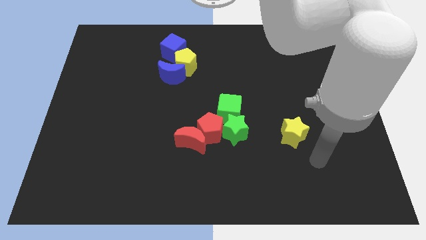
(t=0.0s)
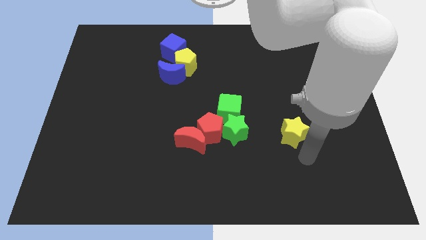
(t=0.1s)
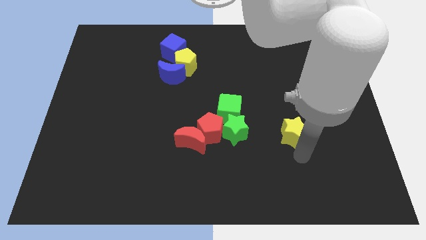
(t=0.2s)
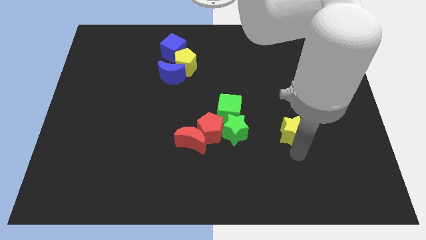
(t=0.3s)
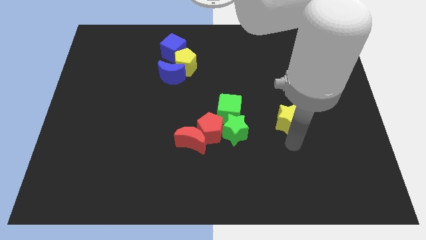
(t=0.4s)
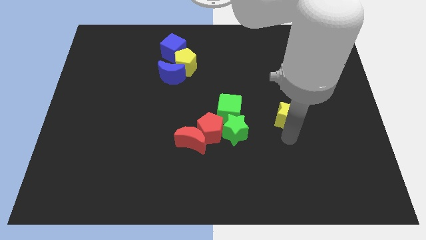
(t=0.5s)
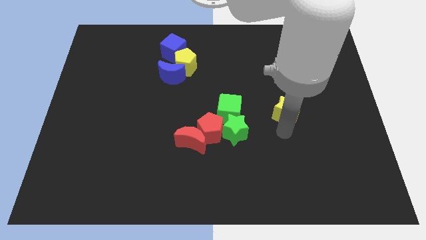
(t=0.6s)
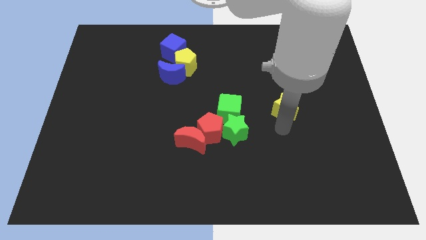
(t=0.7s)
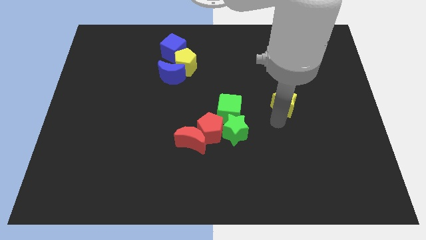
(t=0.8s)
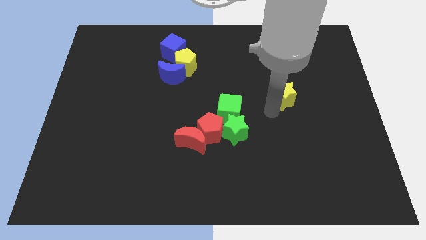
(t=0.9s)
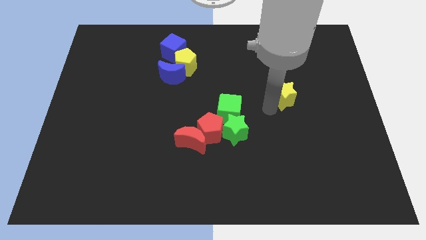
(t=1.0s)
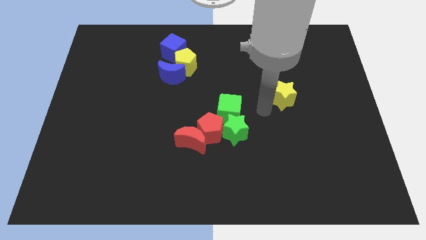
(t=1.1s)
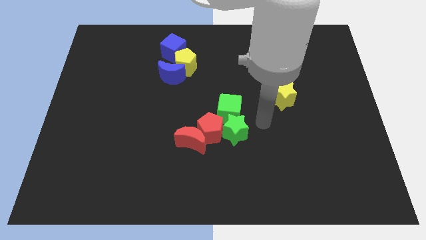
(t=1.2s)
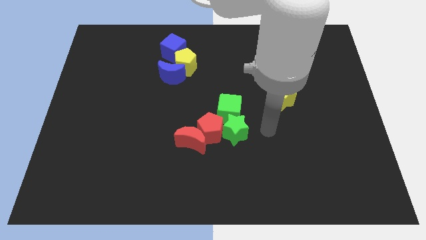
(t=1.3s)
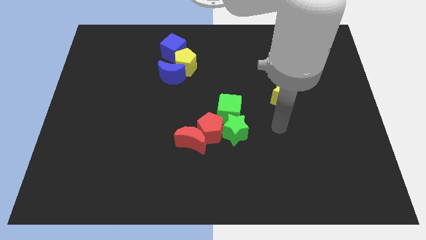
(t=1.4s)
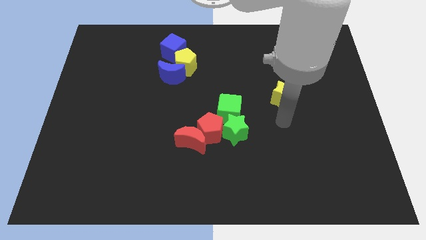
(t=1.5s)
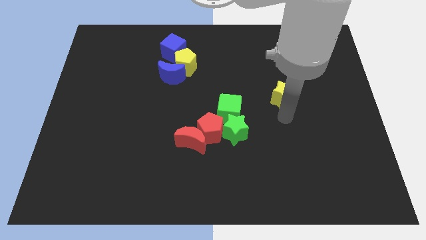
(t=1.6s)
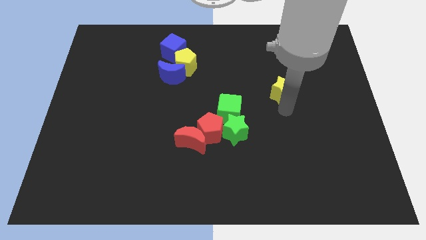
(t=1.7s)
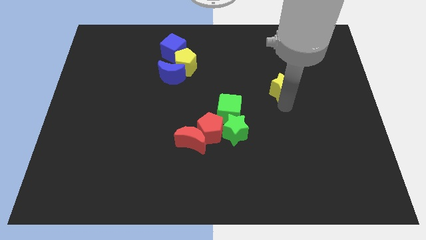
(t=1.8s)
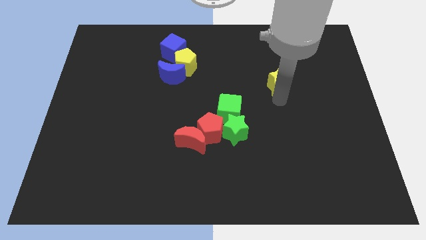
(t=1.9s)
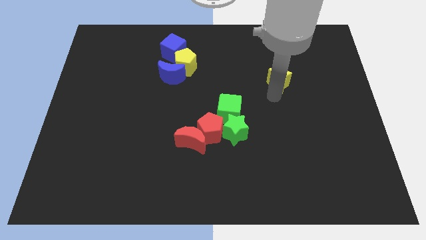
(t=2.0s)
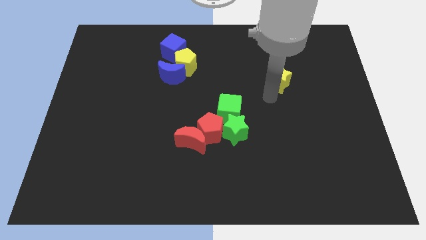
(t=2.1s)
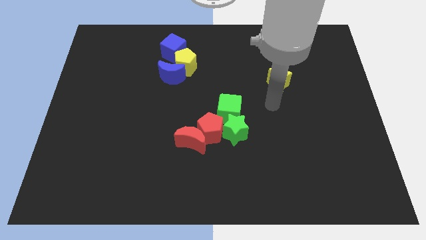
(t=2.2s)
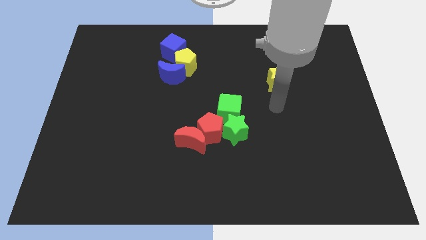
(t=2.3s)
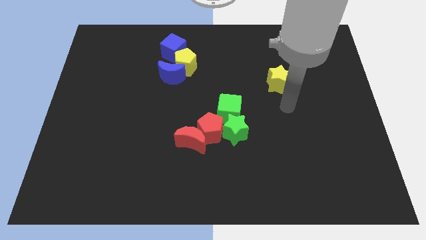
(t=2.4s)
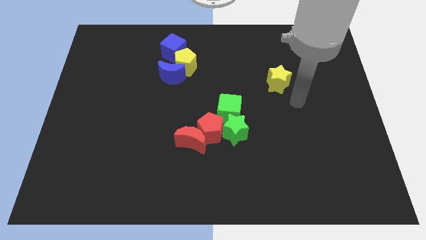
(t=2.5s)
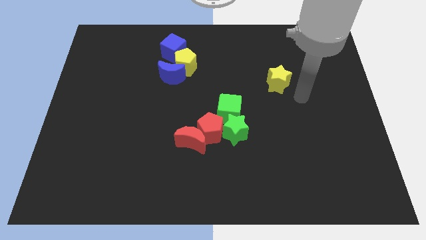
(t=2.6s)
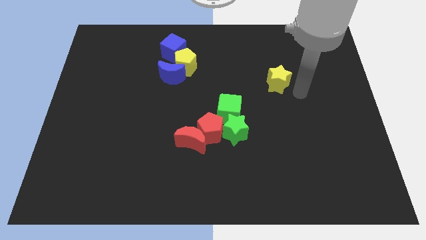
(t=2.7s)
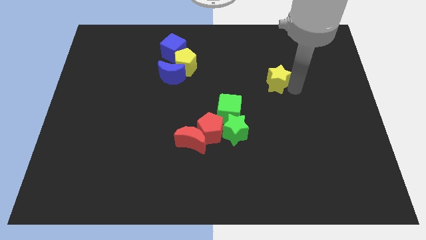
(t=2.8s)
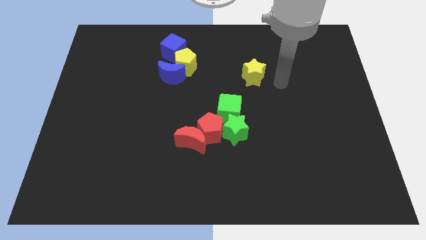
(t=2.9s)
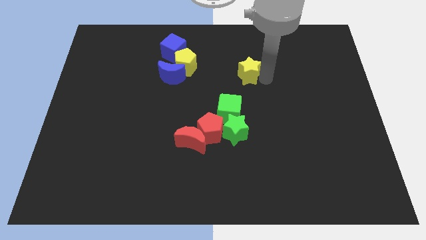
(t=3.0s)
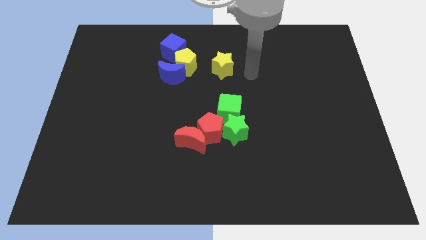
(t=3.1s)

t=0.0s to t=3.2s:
place the yellow star vertically above the green cube

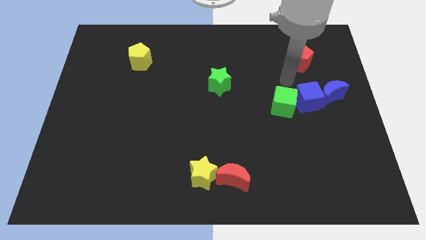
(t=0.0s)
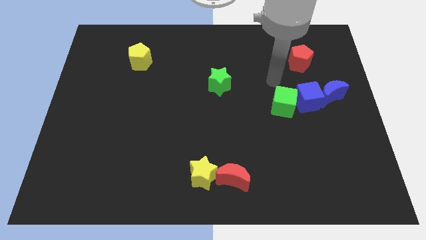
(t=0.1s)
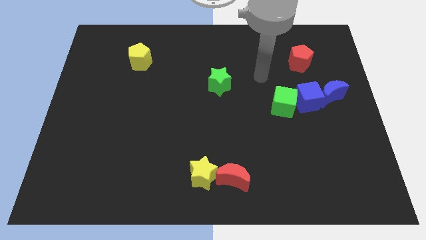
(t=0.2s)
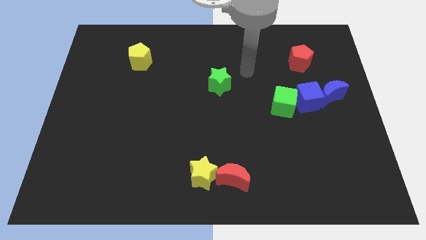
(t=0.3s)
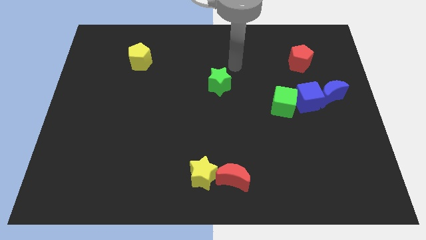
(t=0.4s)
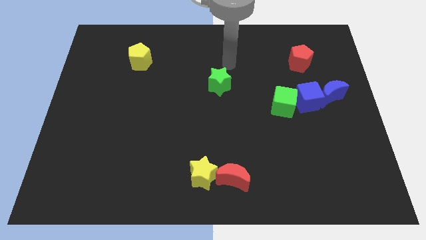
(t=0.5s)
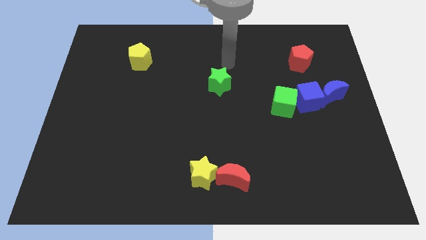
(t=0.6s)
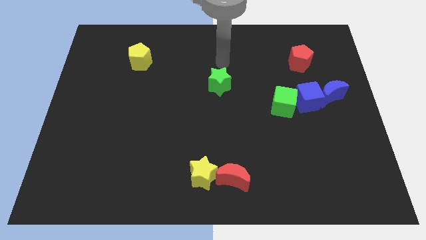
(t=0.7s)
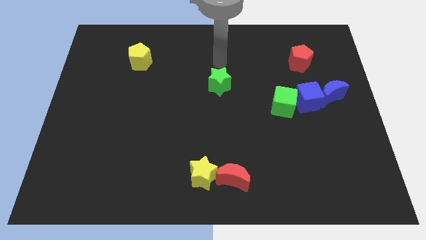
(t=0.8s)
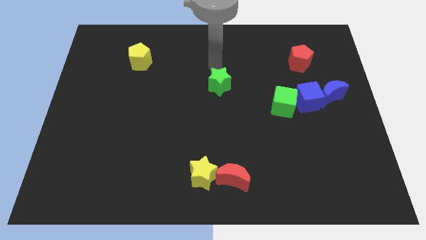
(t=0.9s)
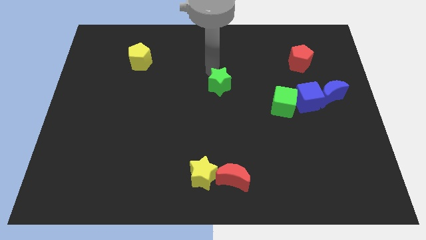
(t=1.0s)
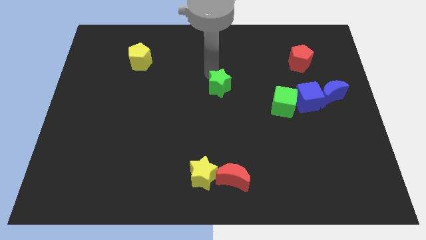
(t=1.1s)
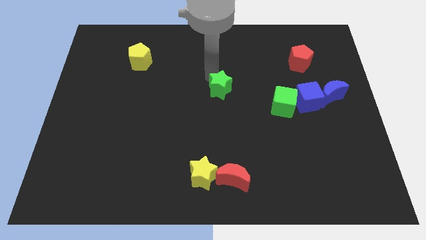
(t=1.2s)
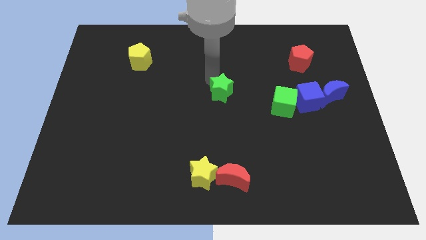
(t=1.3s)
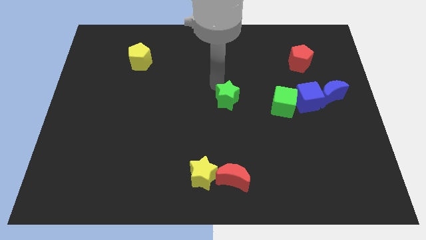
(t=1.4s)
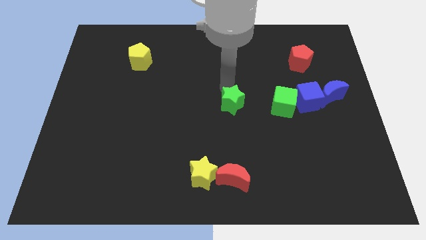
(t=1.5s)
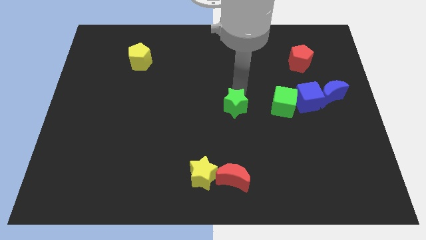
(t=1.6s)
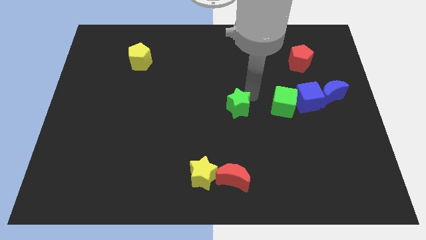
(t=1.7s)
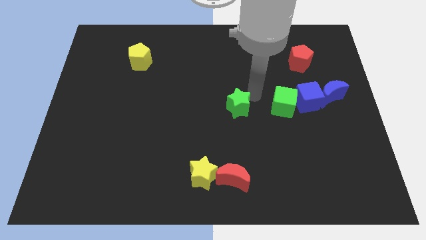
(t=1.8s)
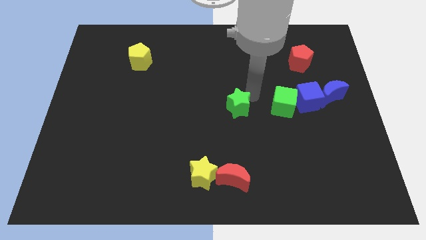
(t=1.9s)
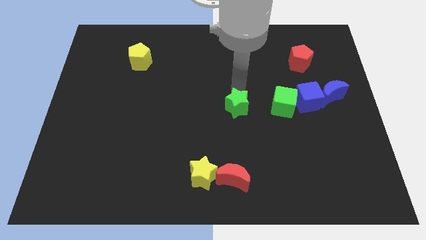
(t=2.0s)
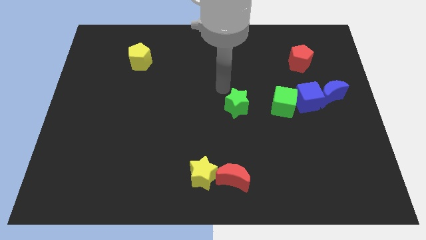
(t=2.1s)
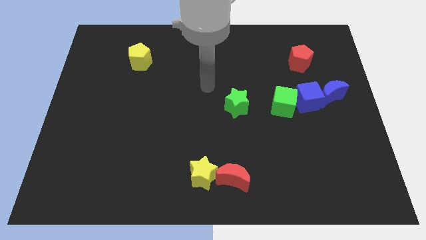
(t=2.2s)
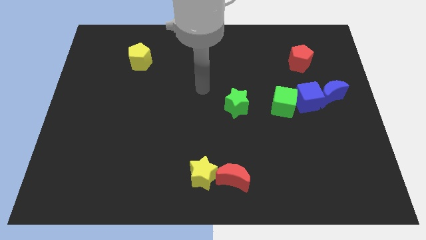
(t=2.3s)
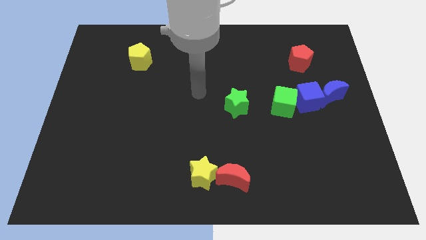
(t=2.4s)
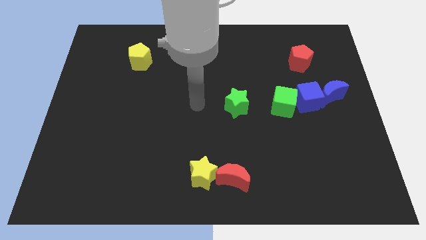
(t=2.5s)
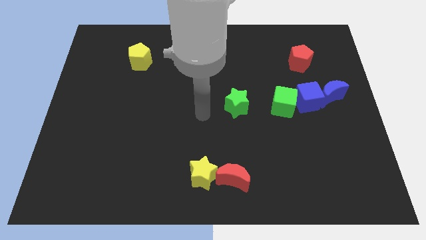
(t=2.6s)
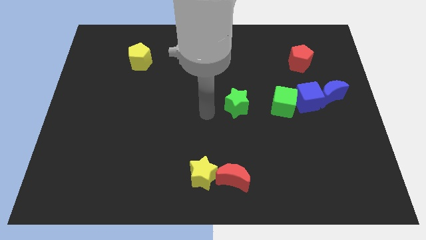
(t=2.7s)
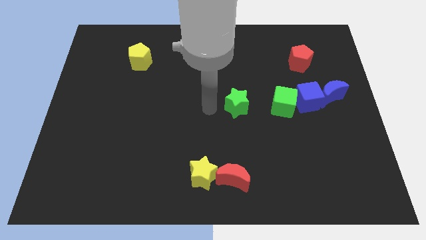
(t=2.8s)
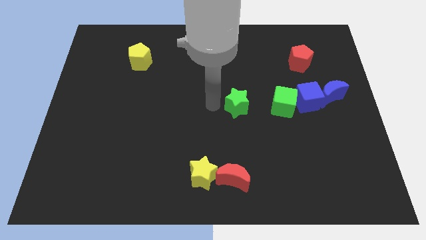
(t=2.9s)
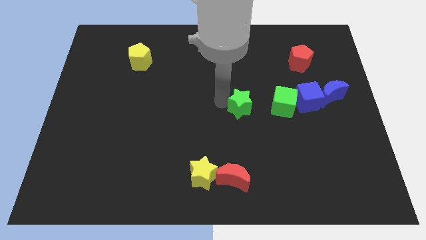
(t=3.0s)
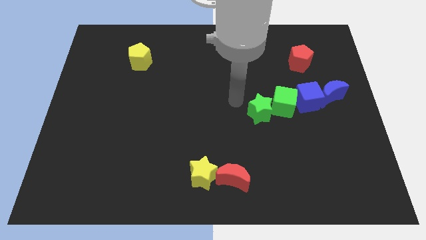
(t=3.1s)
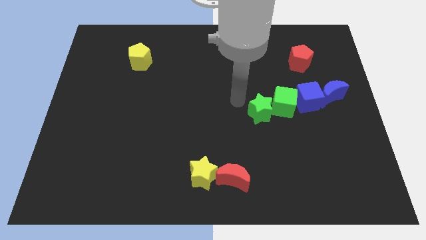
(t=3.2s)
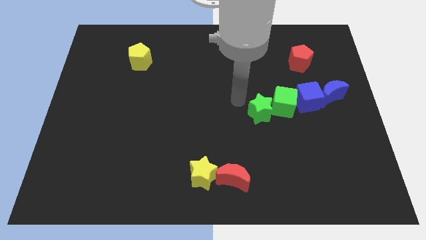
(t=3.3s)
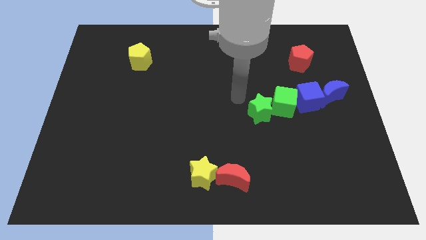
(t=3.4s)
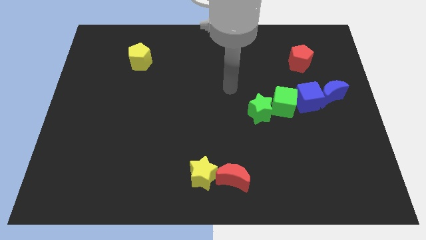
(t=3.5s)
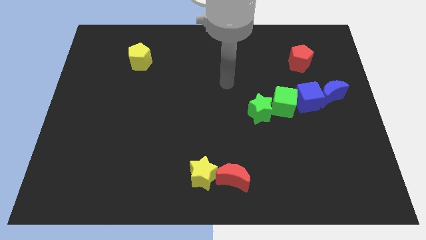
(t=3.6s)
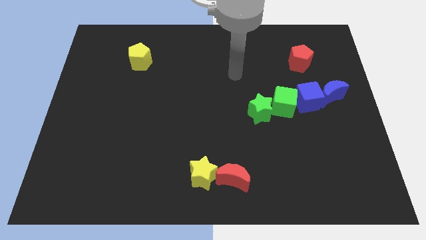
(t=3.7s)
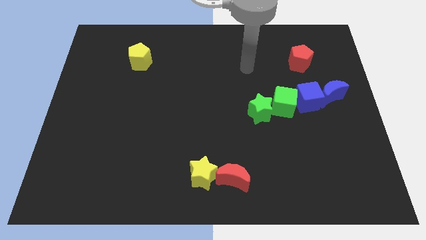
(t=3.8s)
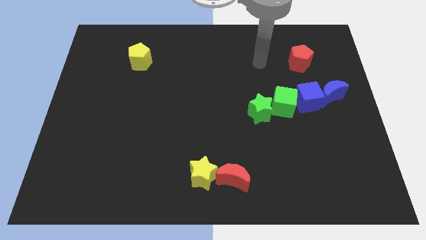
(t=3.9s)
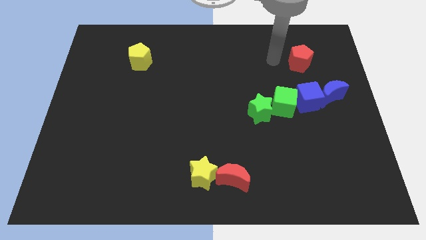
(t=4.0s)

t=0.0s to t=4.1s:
slide the green star to the bottom left of the green cube

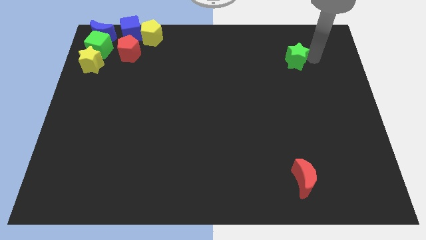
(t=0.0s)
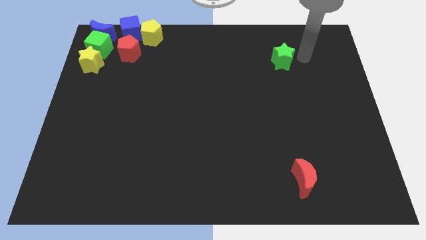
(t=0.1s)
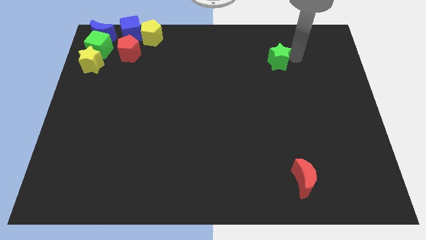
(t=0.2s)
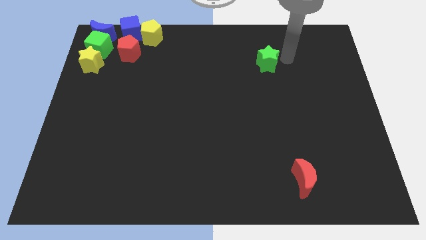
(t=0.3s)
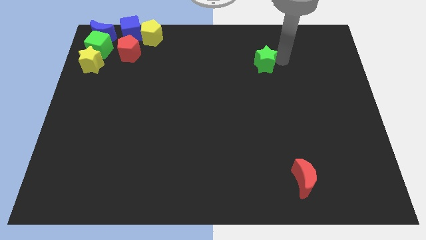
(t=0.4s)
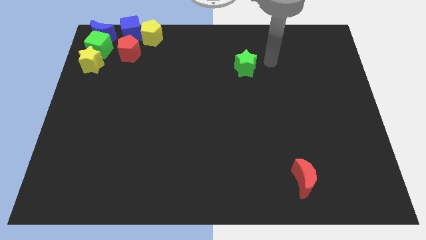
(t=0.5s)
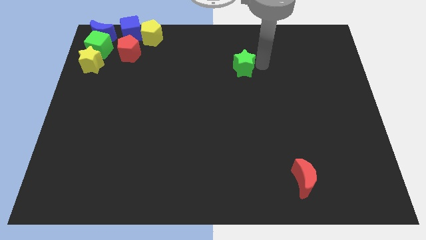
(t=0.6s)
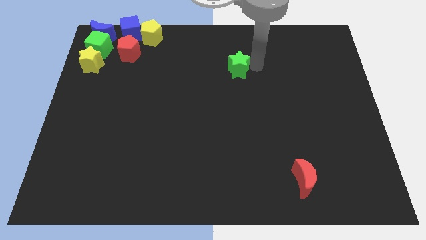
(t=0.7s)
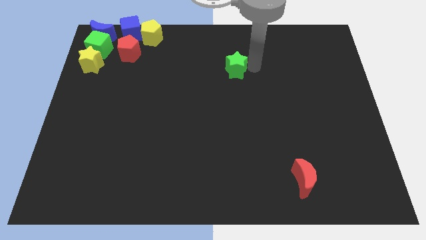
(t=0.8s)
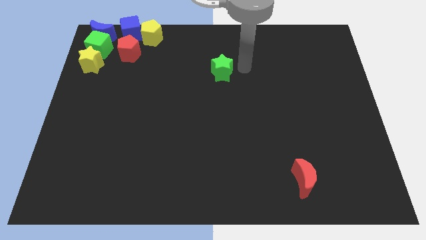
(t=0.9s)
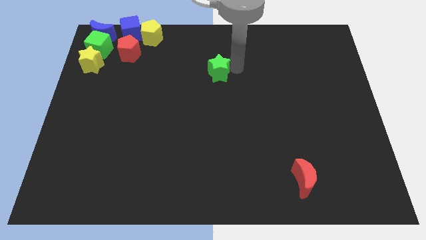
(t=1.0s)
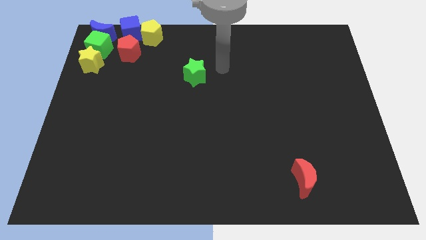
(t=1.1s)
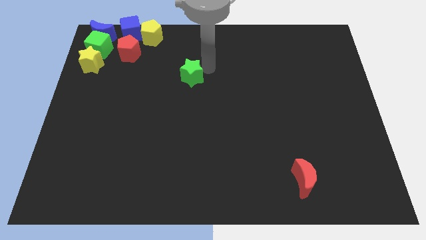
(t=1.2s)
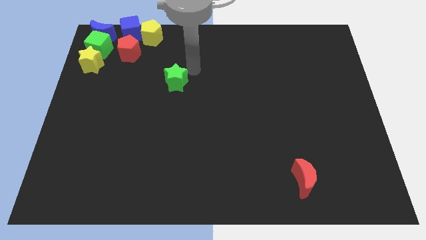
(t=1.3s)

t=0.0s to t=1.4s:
push green star to the left

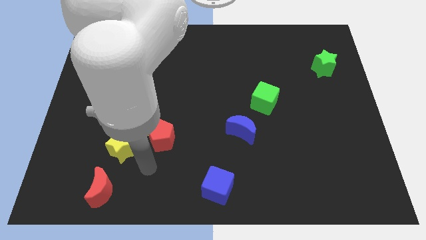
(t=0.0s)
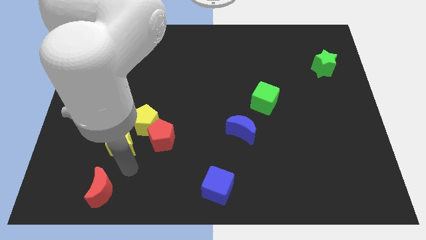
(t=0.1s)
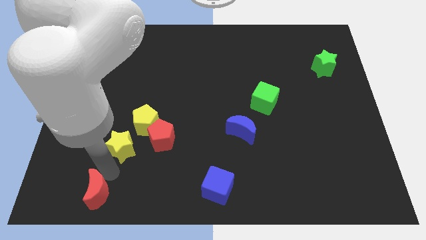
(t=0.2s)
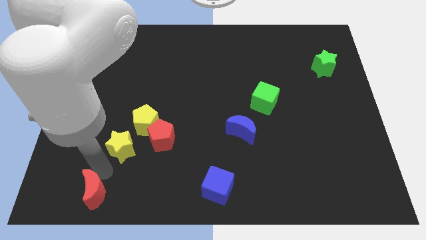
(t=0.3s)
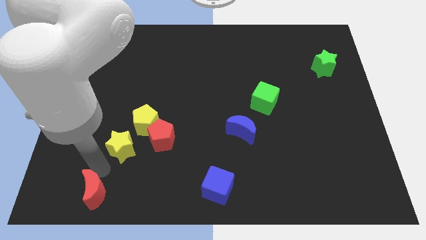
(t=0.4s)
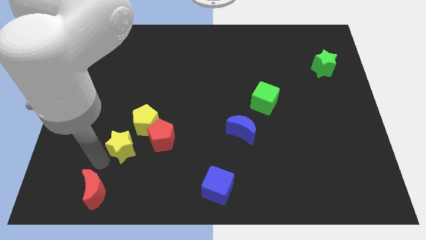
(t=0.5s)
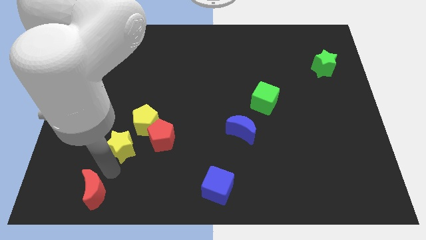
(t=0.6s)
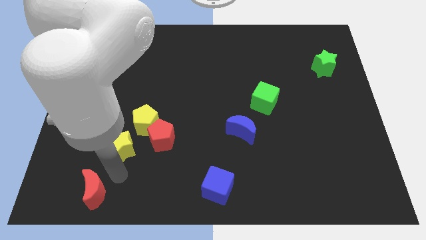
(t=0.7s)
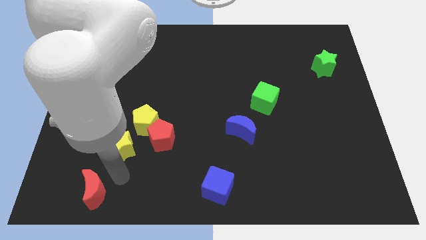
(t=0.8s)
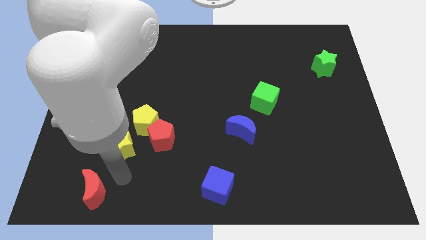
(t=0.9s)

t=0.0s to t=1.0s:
move the red crescent slightly
